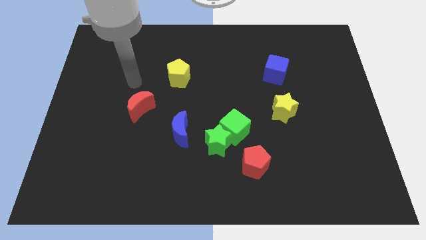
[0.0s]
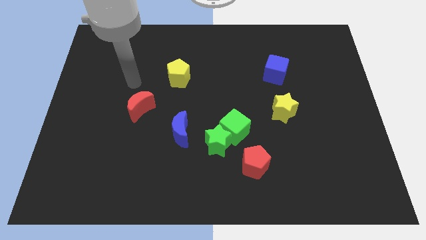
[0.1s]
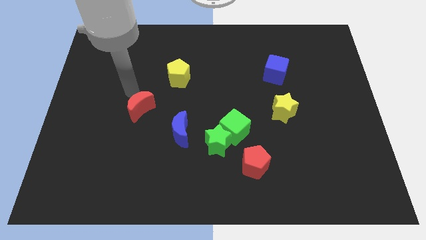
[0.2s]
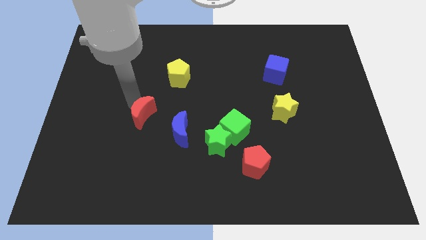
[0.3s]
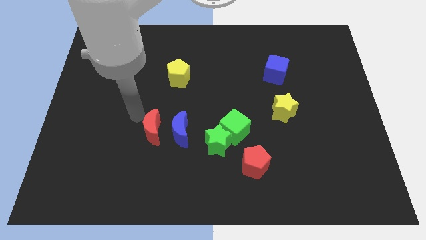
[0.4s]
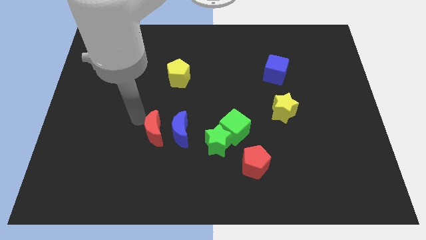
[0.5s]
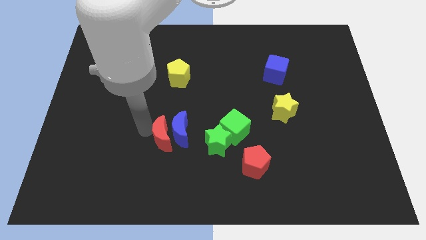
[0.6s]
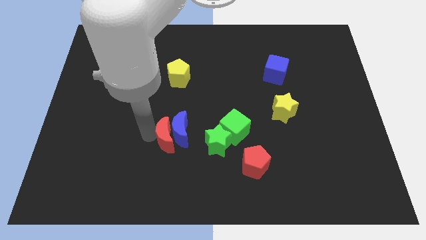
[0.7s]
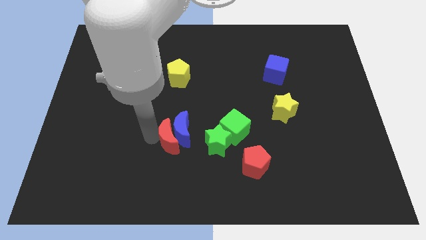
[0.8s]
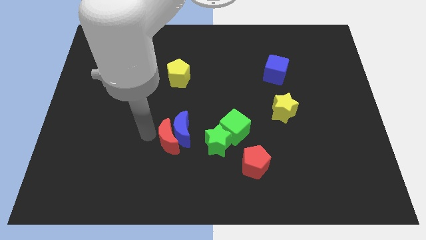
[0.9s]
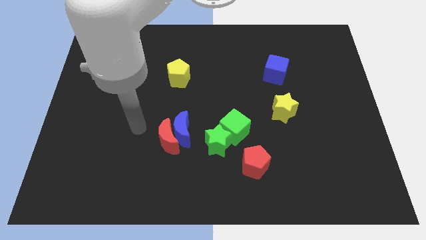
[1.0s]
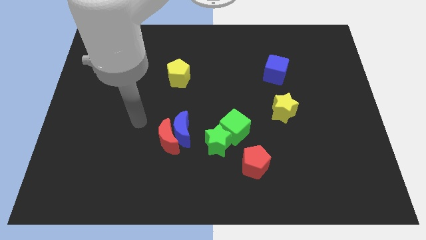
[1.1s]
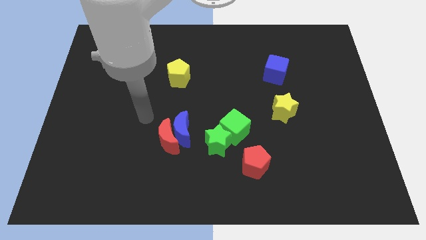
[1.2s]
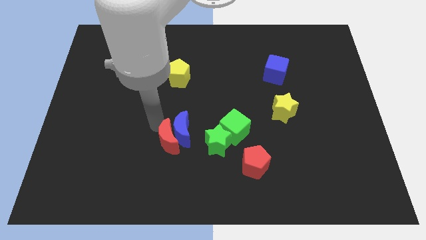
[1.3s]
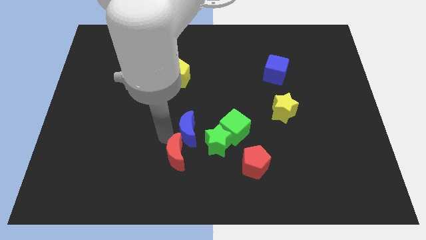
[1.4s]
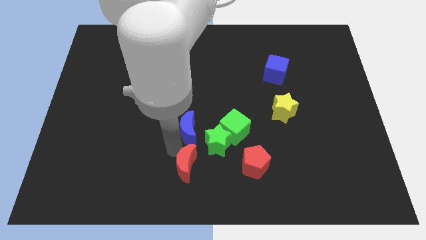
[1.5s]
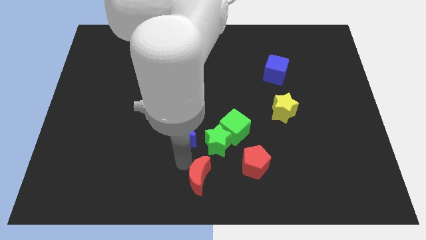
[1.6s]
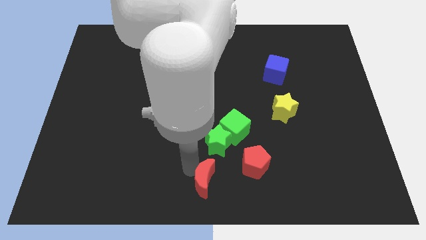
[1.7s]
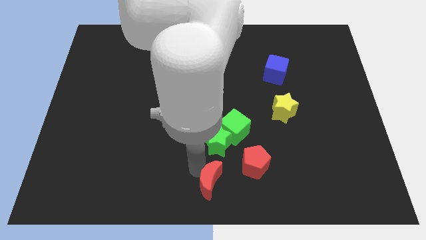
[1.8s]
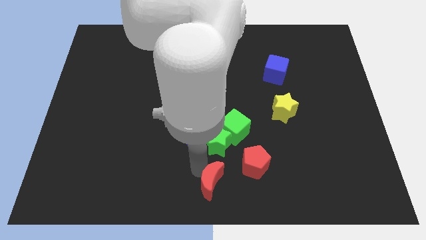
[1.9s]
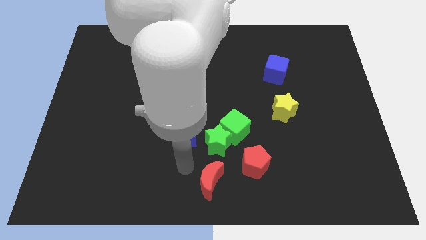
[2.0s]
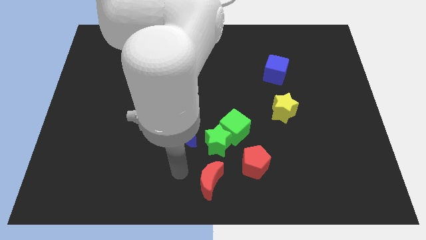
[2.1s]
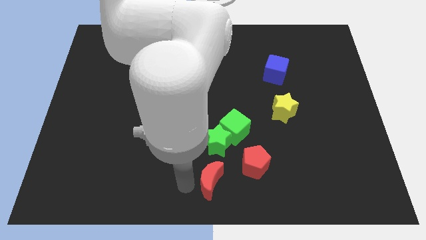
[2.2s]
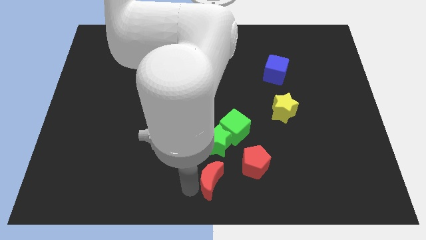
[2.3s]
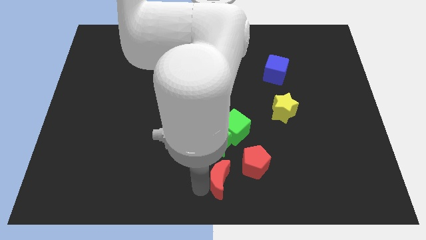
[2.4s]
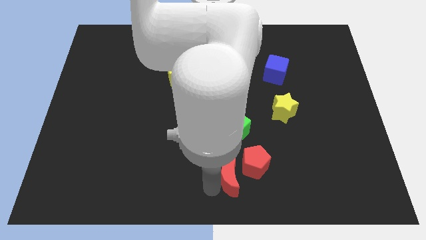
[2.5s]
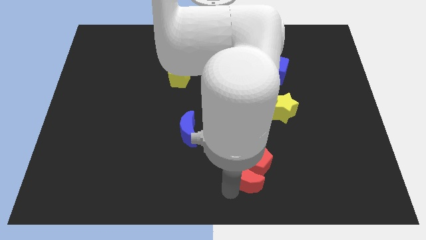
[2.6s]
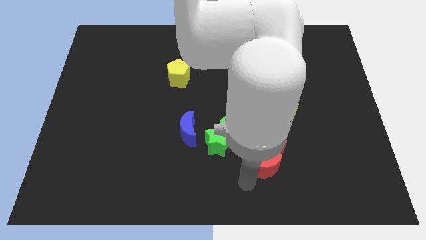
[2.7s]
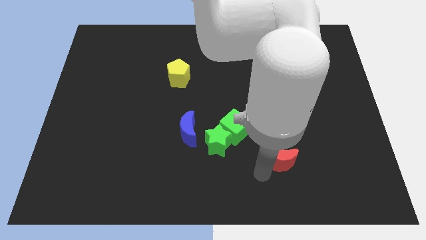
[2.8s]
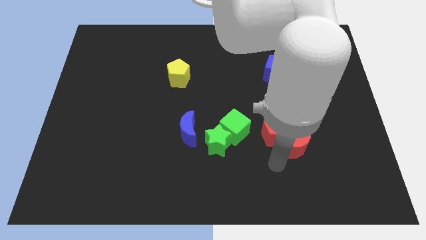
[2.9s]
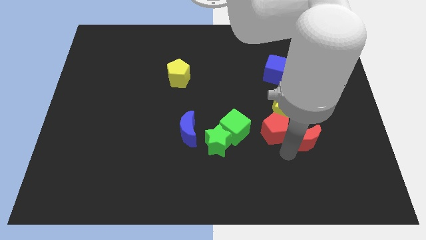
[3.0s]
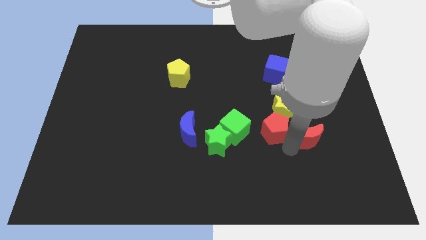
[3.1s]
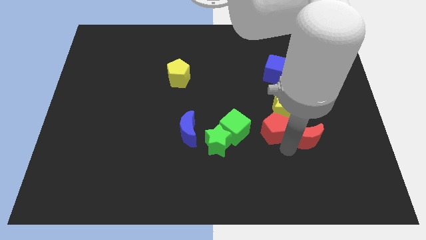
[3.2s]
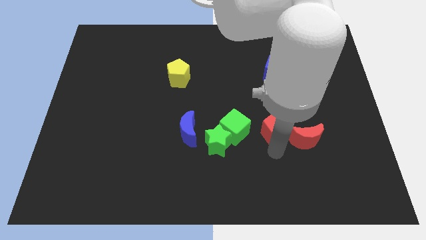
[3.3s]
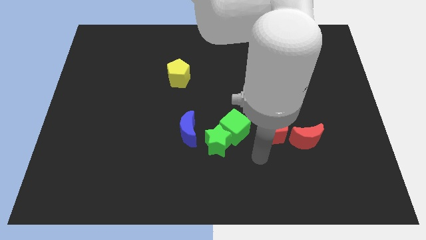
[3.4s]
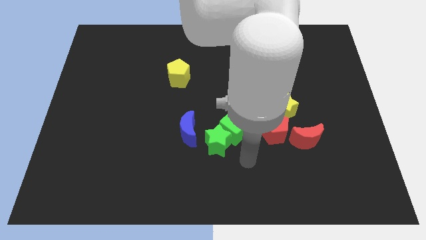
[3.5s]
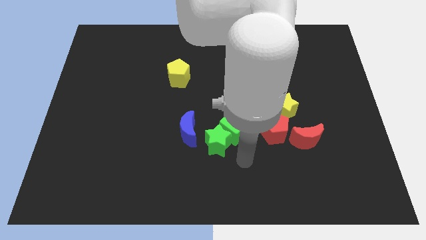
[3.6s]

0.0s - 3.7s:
slide the red moon towards the right side of the red pentagon

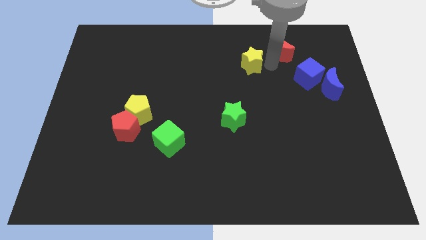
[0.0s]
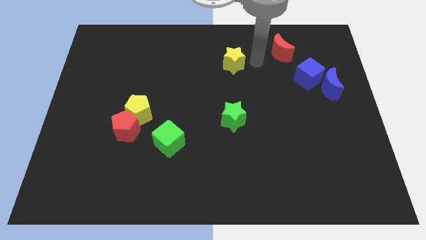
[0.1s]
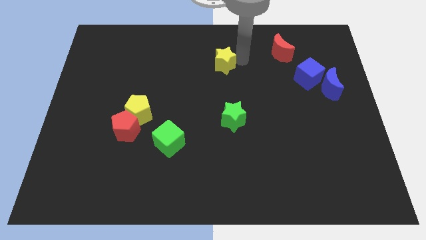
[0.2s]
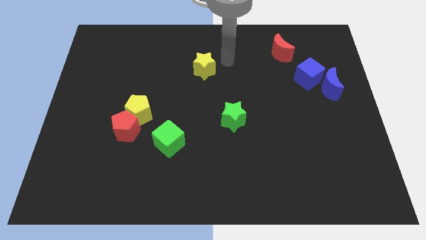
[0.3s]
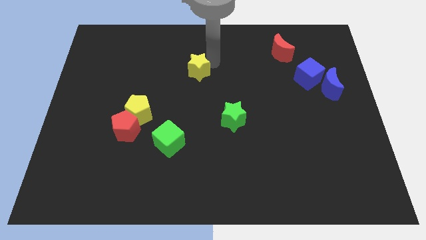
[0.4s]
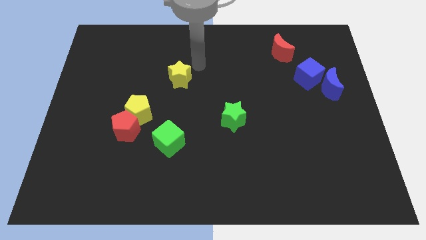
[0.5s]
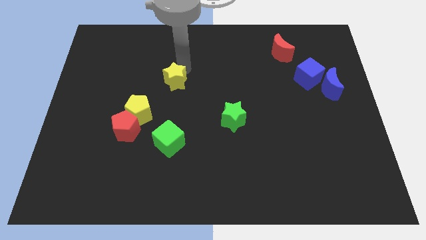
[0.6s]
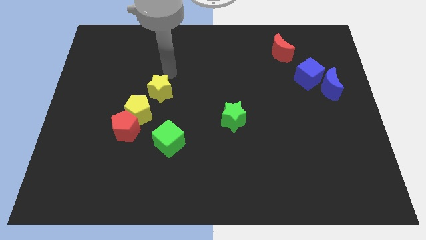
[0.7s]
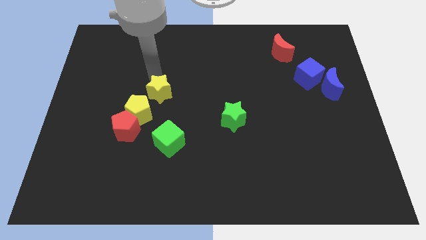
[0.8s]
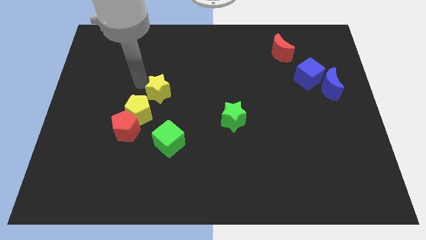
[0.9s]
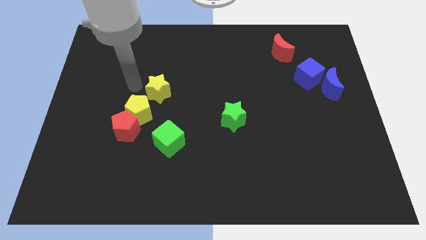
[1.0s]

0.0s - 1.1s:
place yellow star on top right of yellow pentagon

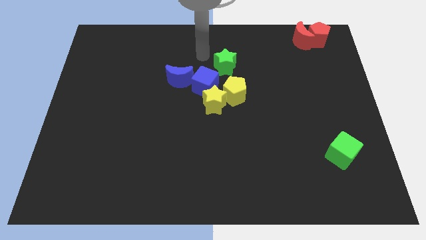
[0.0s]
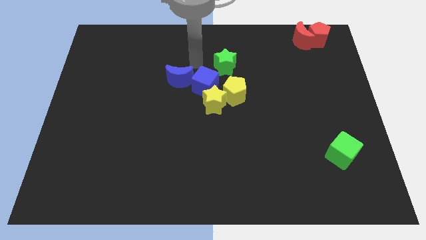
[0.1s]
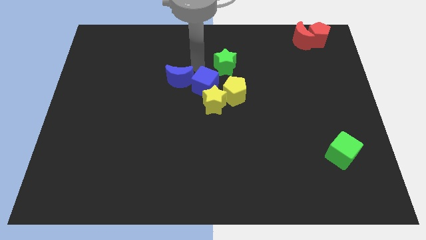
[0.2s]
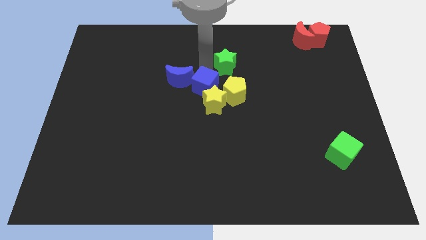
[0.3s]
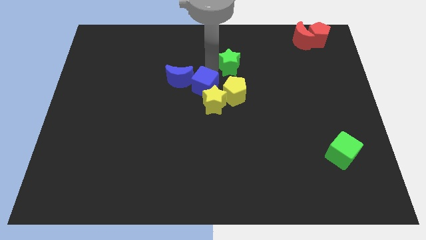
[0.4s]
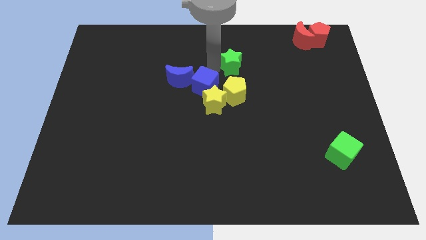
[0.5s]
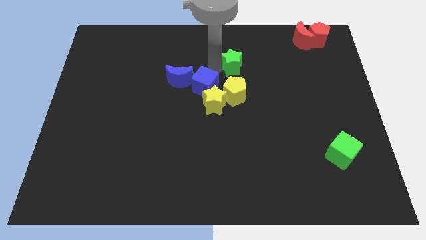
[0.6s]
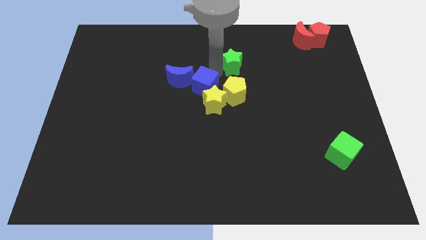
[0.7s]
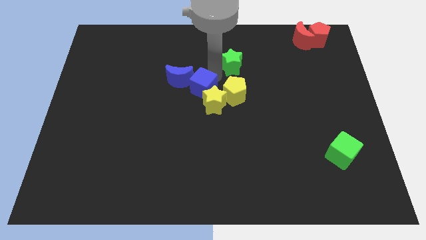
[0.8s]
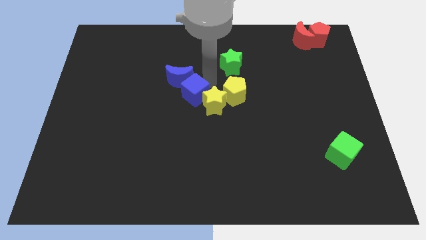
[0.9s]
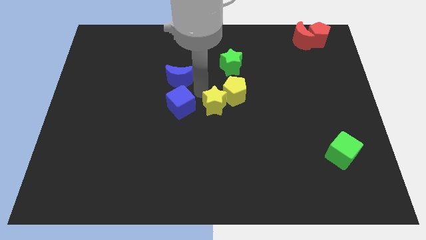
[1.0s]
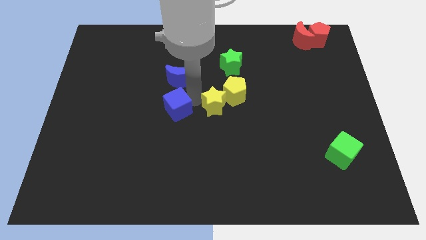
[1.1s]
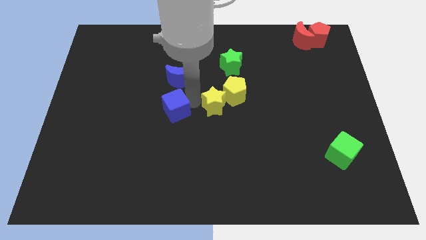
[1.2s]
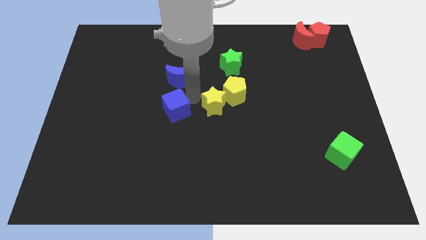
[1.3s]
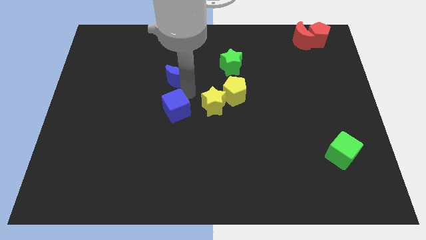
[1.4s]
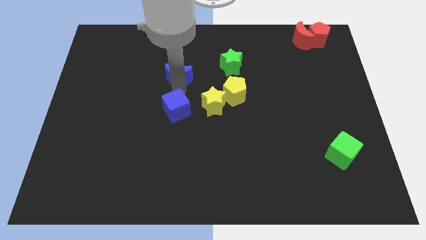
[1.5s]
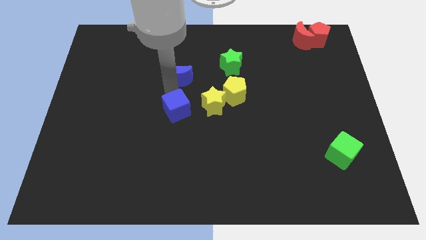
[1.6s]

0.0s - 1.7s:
separate the blue crescent from blue cube

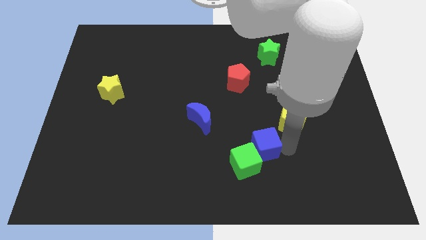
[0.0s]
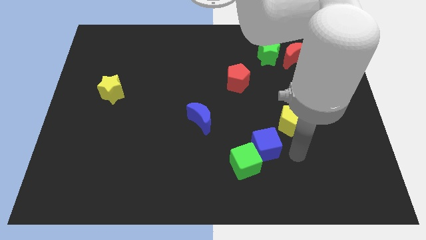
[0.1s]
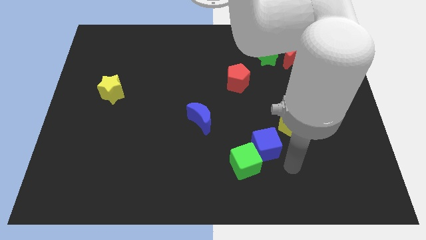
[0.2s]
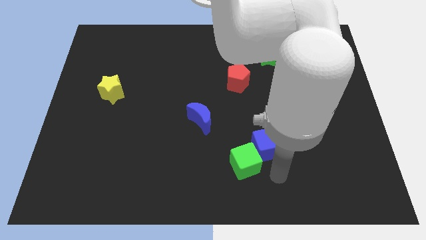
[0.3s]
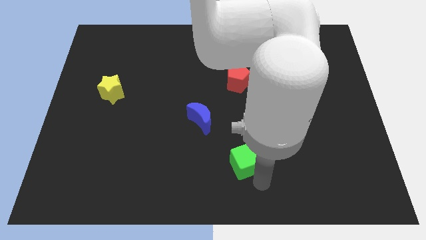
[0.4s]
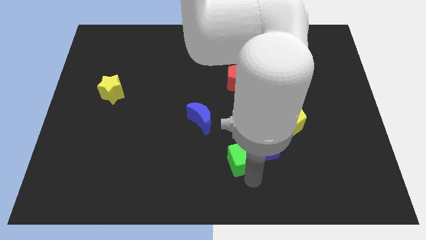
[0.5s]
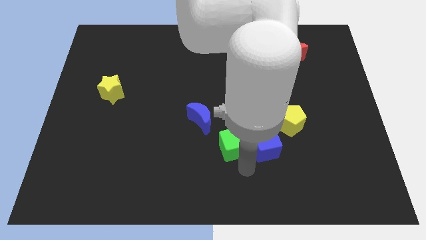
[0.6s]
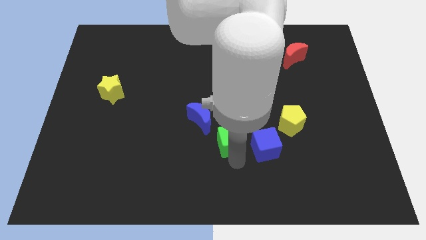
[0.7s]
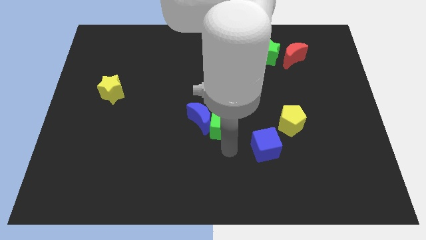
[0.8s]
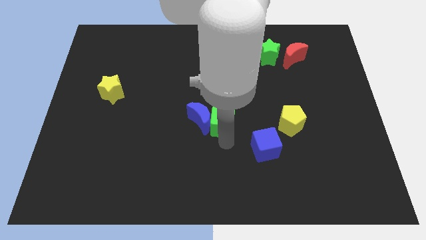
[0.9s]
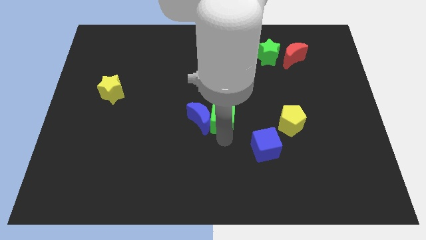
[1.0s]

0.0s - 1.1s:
move the green cube to the right of the blue crescent

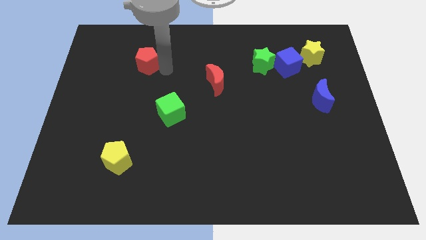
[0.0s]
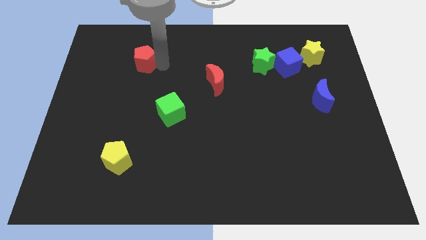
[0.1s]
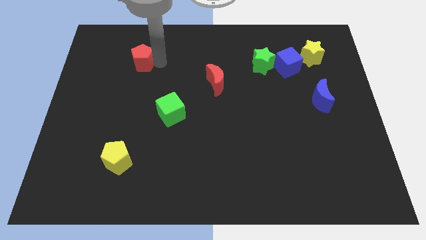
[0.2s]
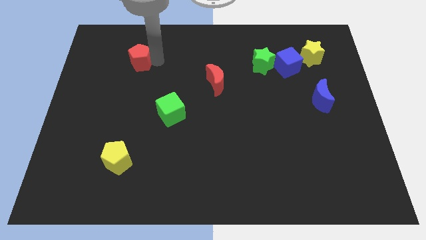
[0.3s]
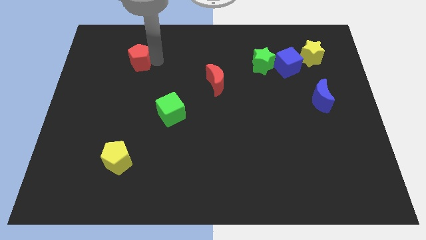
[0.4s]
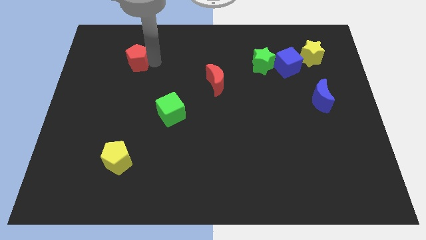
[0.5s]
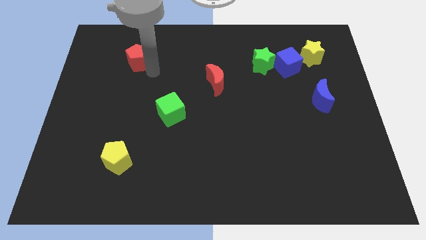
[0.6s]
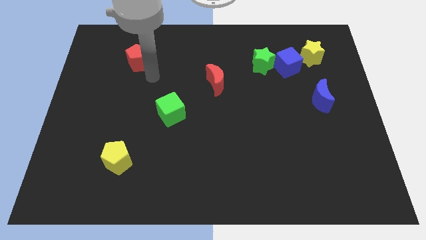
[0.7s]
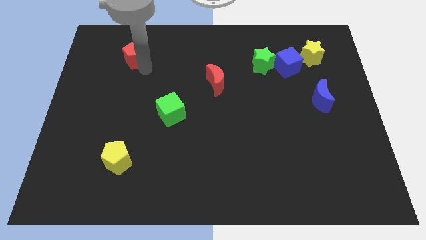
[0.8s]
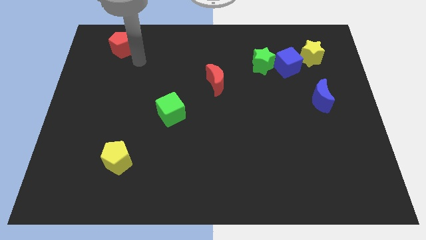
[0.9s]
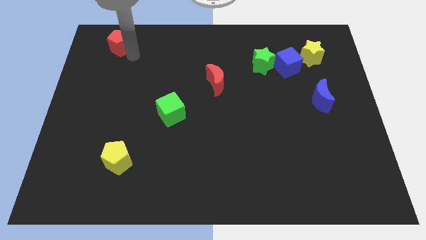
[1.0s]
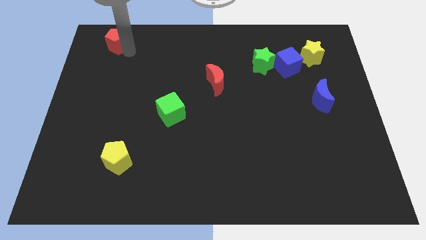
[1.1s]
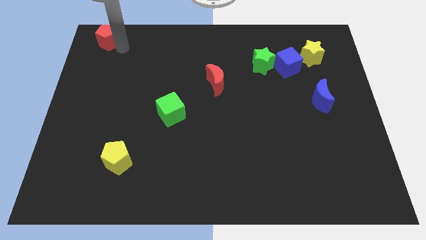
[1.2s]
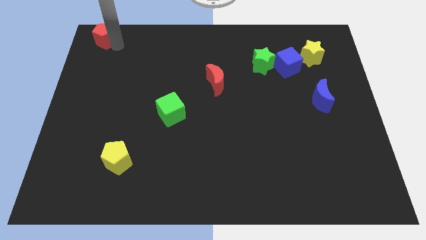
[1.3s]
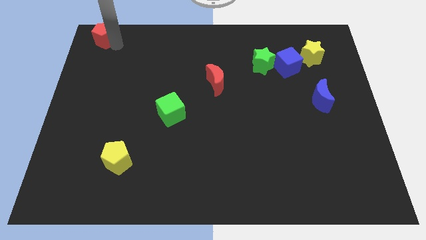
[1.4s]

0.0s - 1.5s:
move red pentagon towards top left corner of the board
